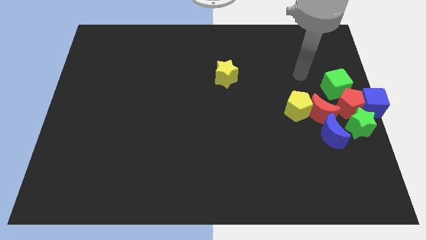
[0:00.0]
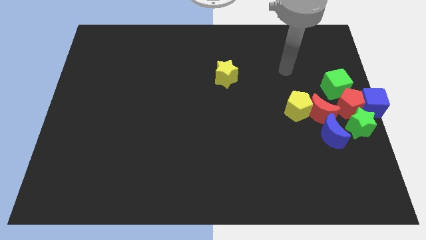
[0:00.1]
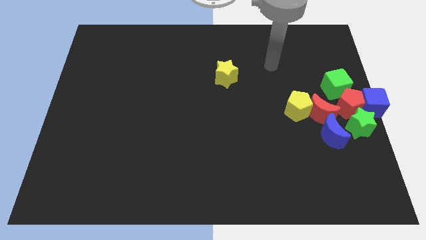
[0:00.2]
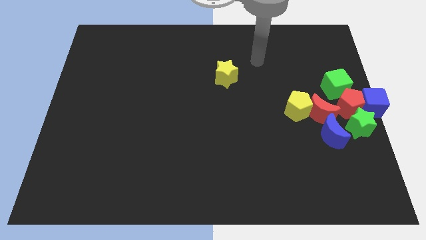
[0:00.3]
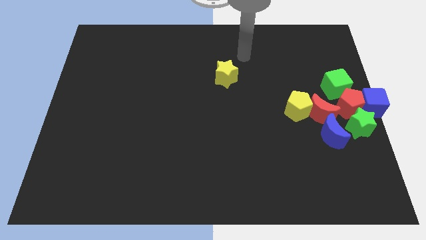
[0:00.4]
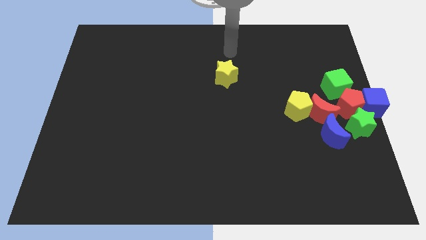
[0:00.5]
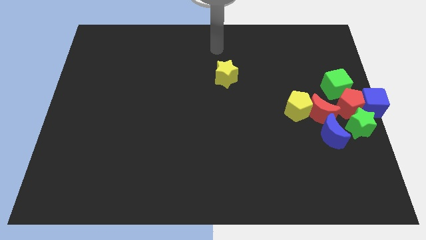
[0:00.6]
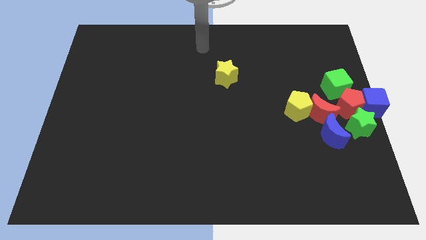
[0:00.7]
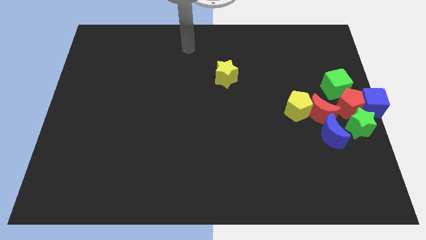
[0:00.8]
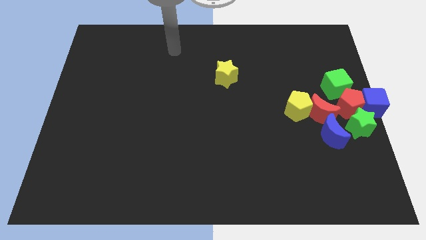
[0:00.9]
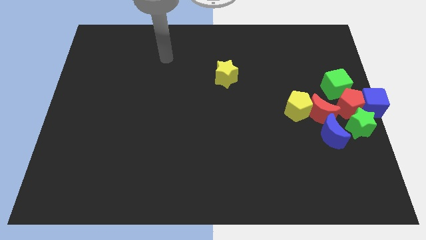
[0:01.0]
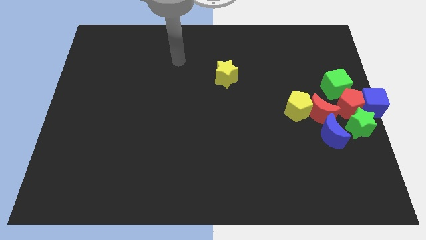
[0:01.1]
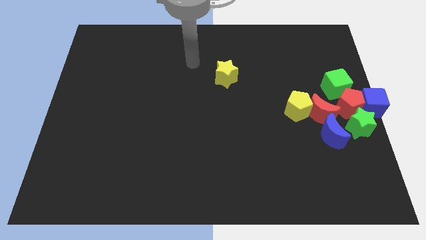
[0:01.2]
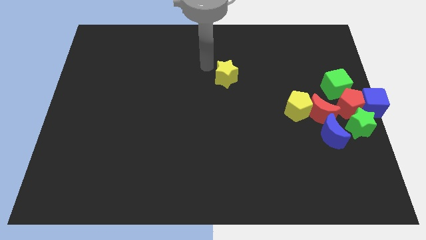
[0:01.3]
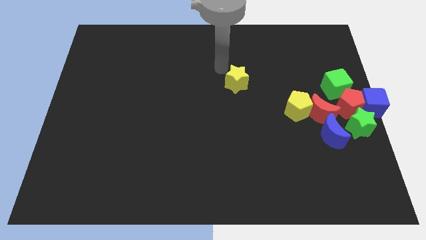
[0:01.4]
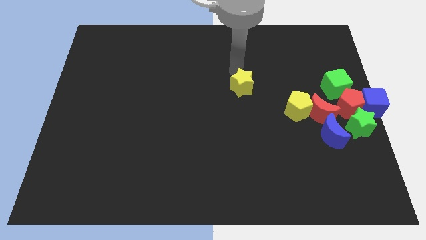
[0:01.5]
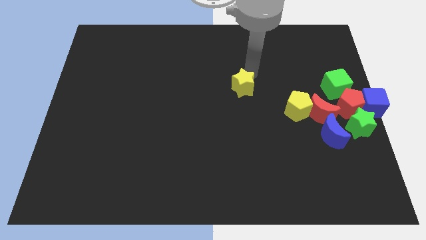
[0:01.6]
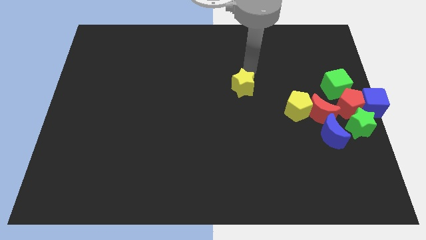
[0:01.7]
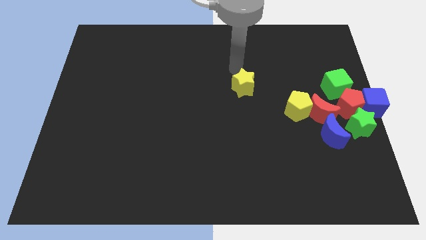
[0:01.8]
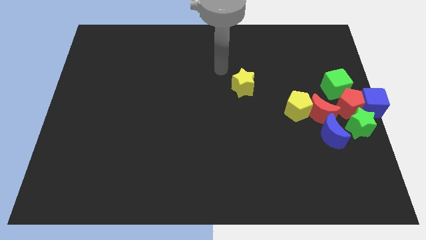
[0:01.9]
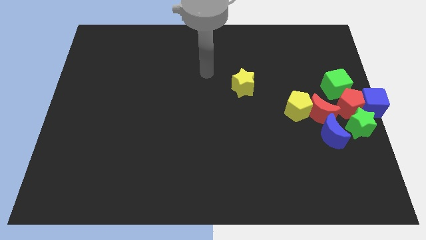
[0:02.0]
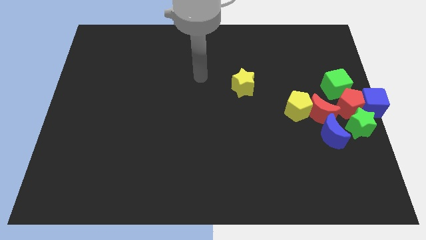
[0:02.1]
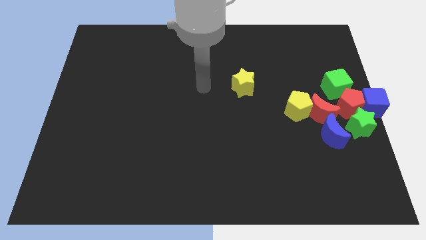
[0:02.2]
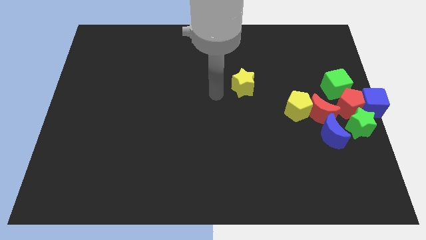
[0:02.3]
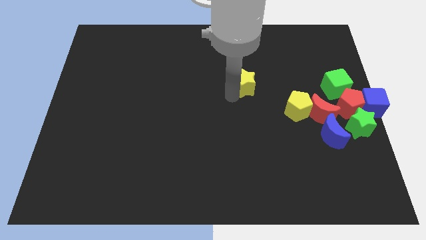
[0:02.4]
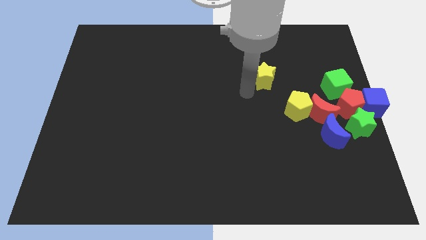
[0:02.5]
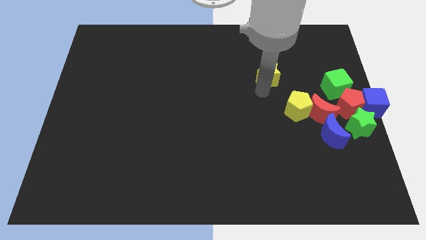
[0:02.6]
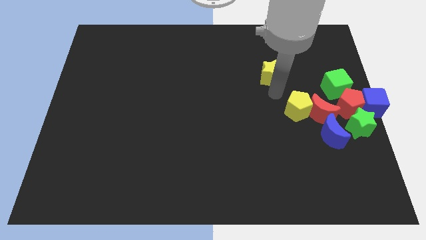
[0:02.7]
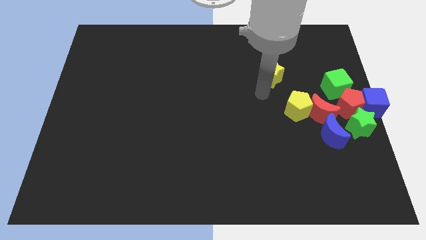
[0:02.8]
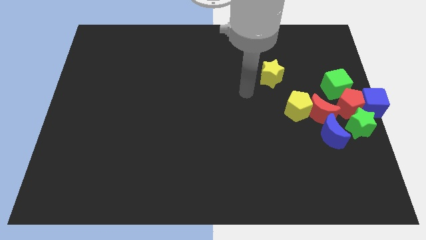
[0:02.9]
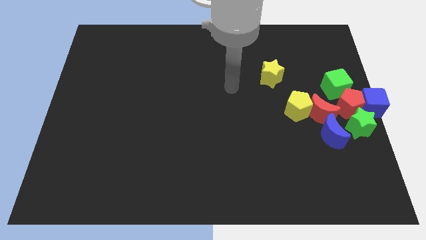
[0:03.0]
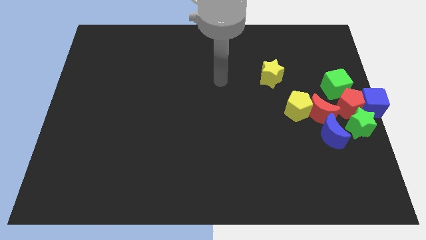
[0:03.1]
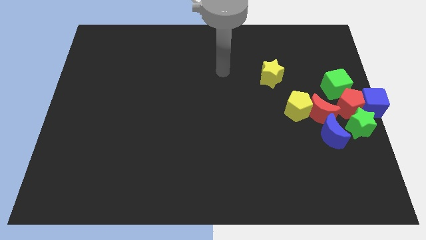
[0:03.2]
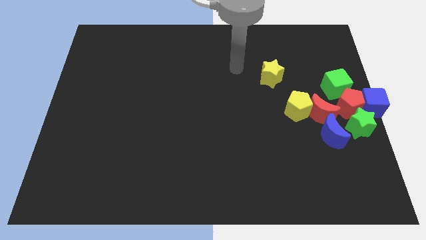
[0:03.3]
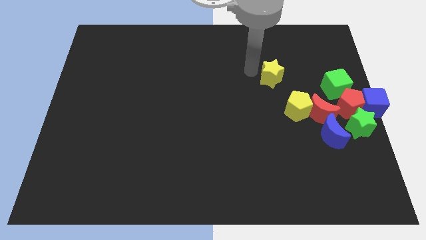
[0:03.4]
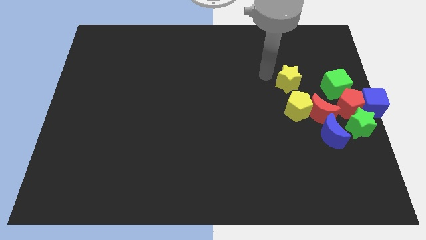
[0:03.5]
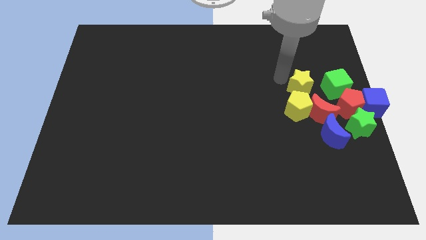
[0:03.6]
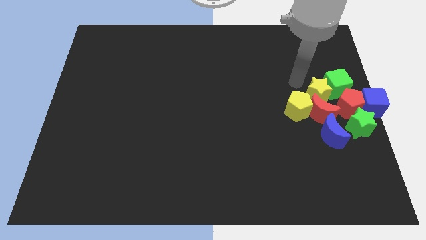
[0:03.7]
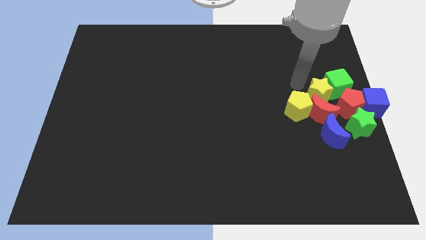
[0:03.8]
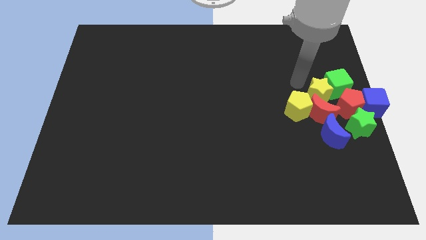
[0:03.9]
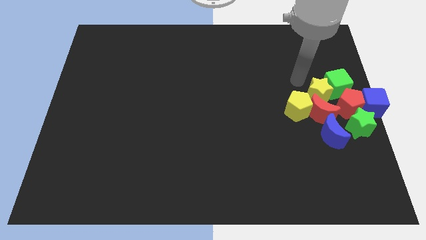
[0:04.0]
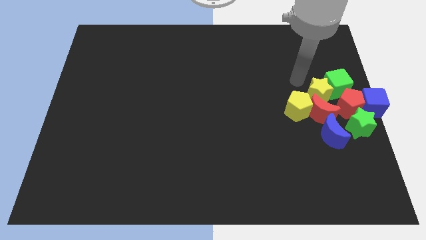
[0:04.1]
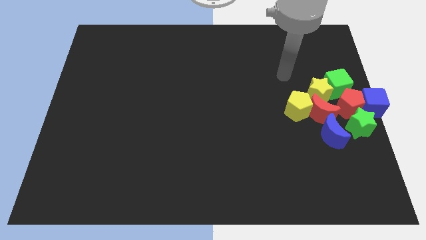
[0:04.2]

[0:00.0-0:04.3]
join the yellow star with the group of blocks

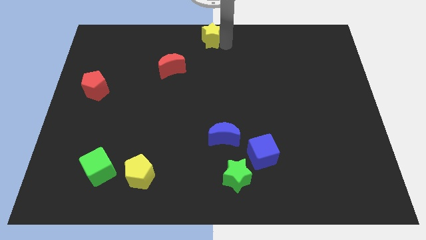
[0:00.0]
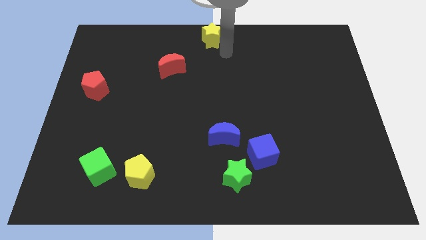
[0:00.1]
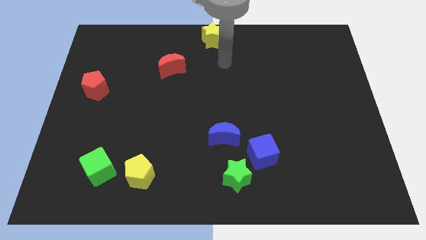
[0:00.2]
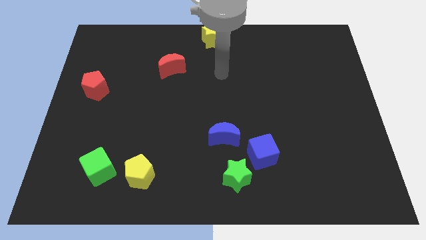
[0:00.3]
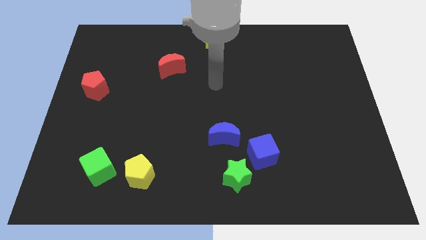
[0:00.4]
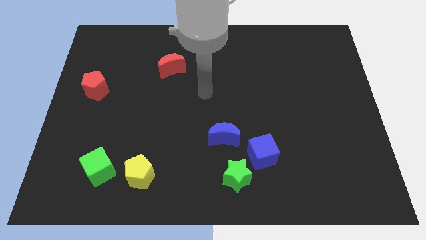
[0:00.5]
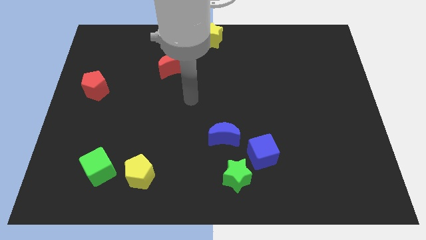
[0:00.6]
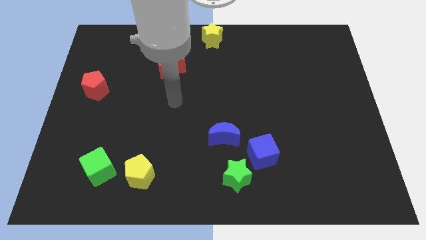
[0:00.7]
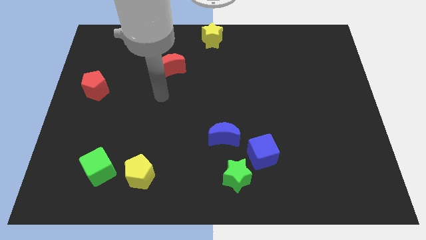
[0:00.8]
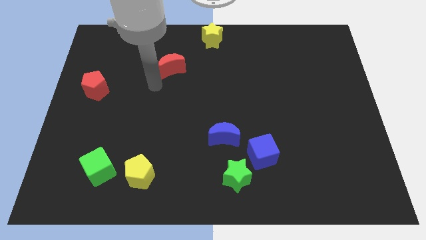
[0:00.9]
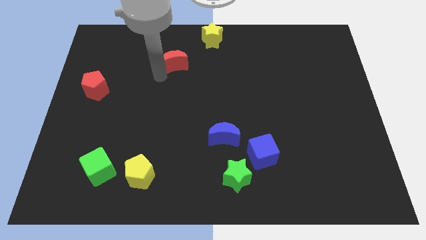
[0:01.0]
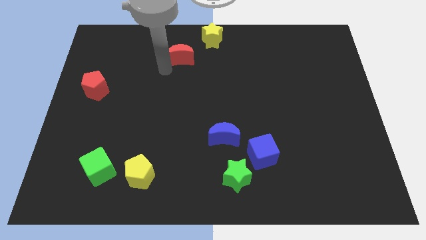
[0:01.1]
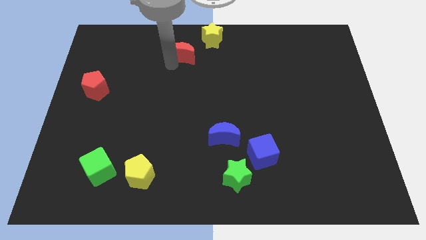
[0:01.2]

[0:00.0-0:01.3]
place the red moon diagonally bottom left to the yellow star

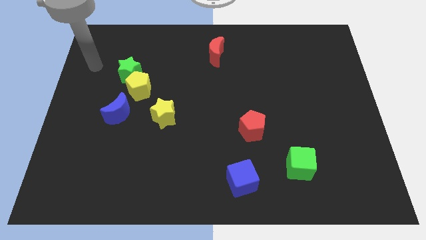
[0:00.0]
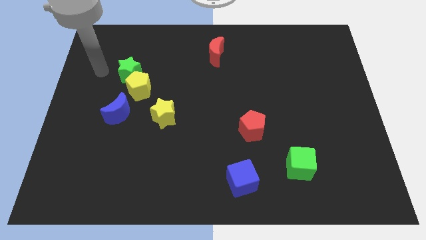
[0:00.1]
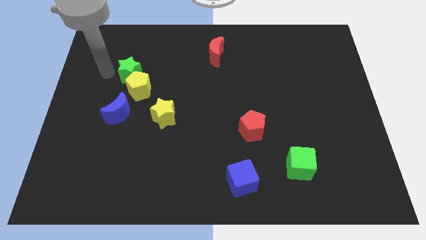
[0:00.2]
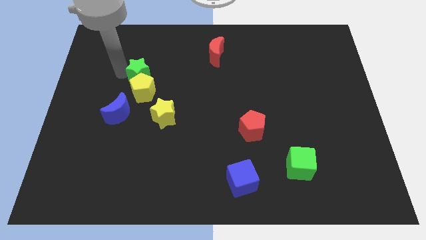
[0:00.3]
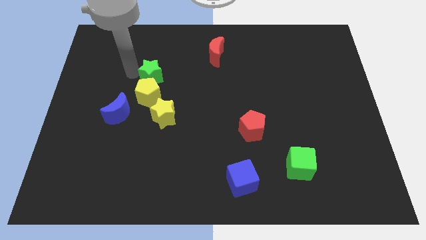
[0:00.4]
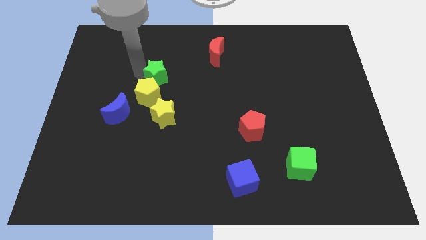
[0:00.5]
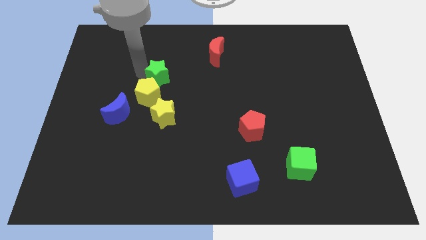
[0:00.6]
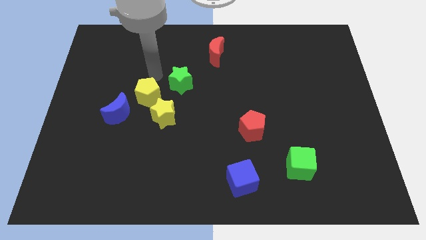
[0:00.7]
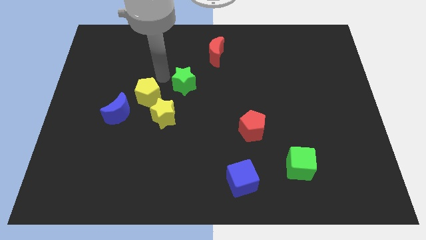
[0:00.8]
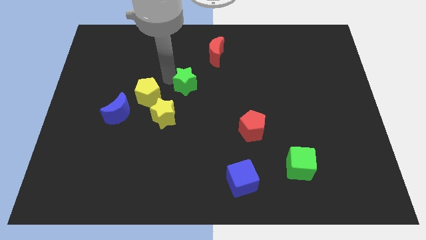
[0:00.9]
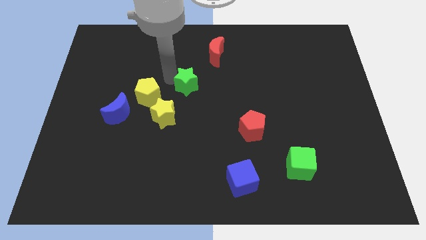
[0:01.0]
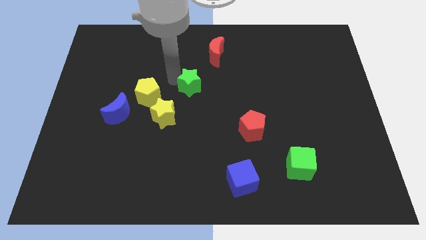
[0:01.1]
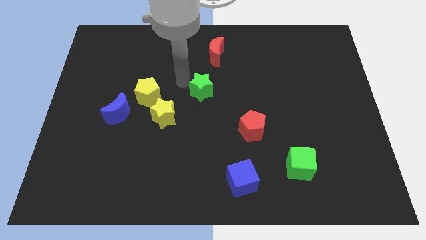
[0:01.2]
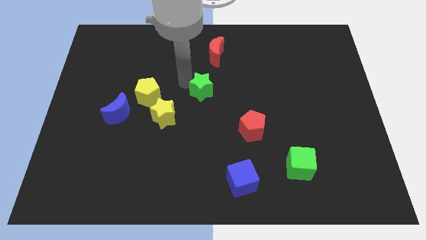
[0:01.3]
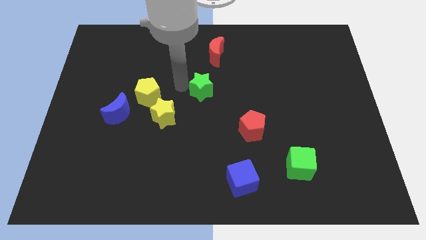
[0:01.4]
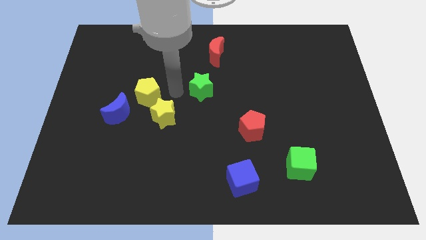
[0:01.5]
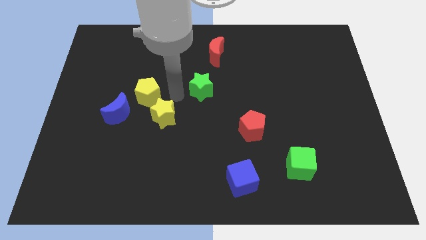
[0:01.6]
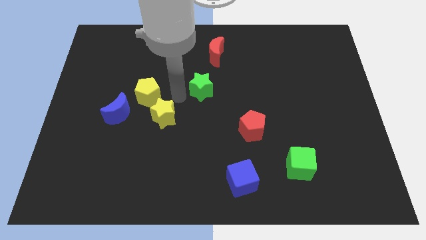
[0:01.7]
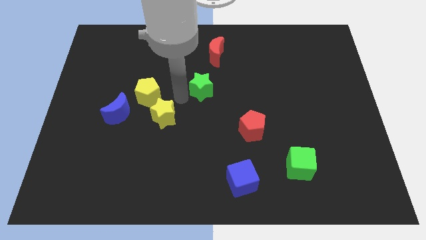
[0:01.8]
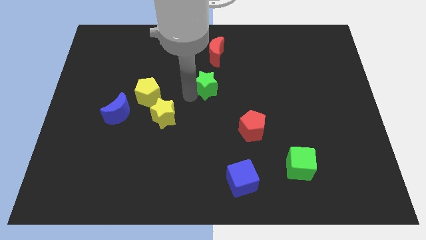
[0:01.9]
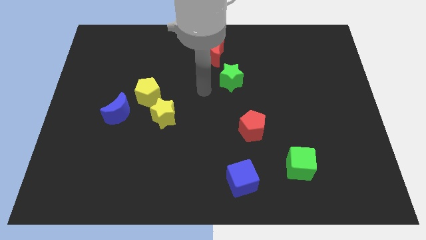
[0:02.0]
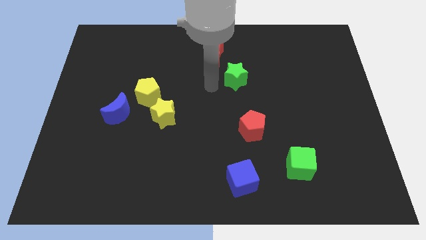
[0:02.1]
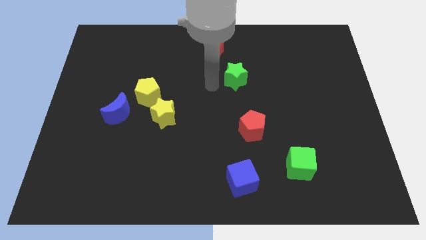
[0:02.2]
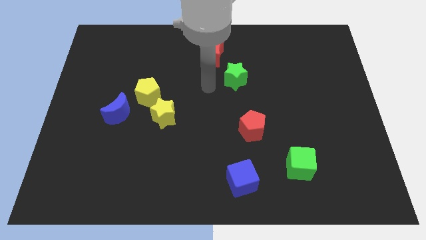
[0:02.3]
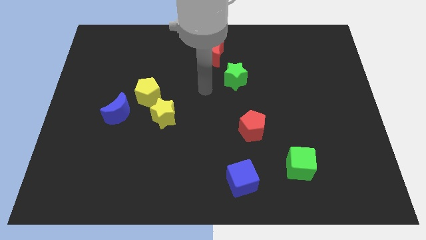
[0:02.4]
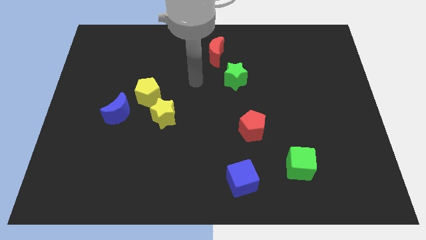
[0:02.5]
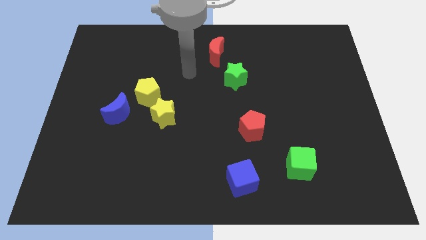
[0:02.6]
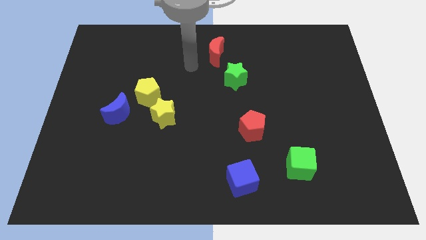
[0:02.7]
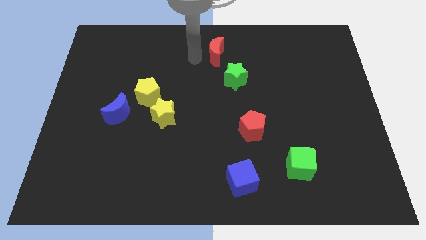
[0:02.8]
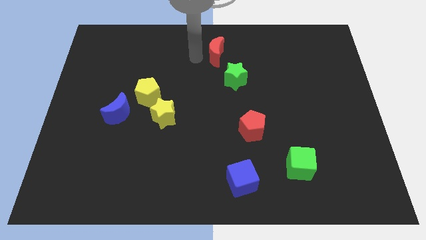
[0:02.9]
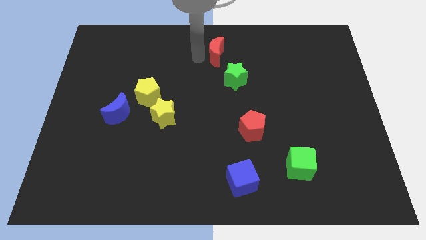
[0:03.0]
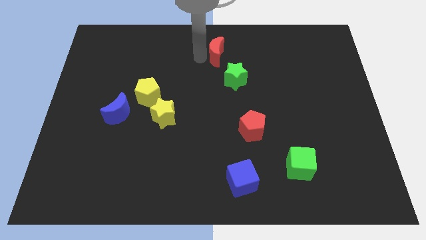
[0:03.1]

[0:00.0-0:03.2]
slide the green star to the bottom right side of the red crescent

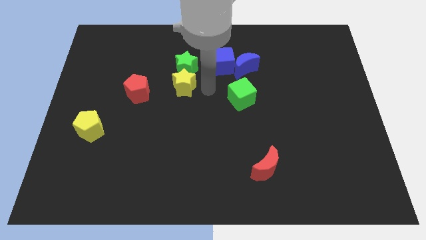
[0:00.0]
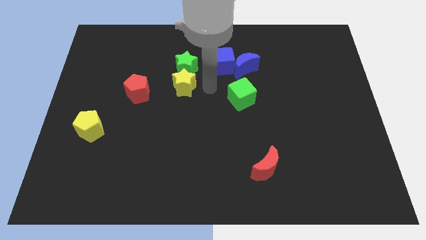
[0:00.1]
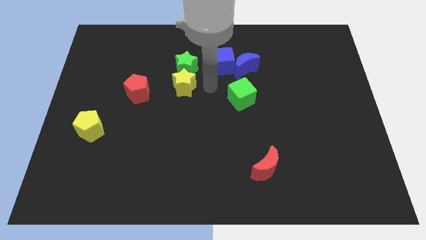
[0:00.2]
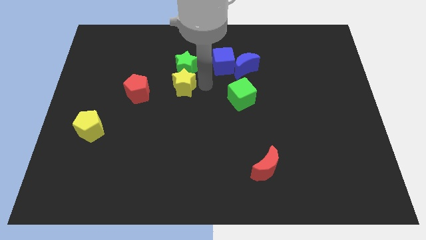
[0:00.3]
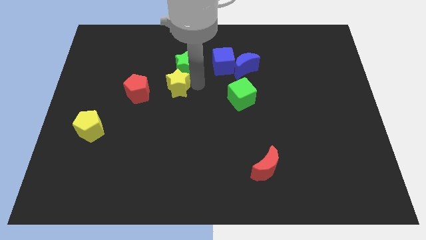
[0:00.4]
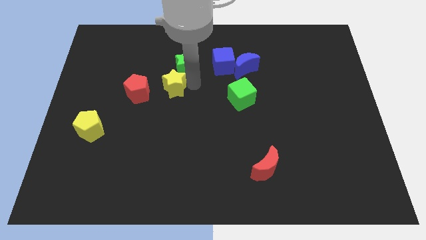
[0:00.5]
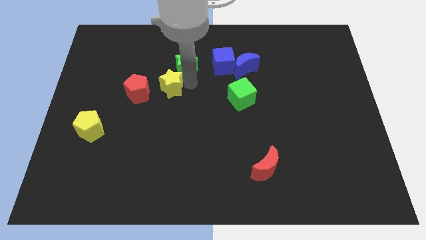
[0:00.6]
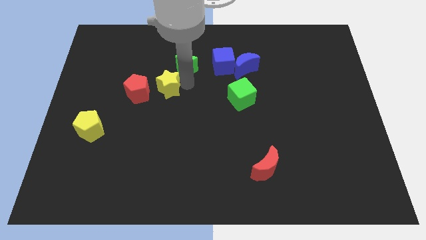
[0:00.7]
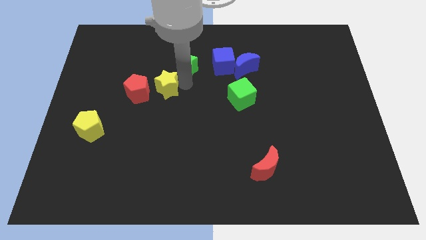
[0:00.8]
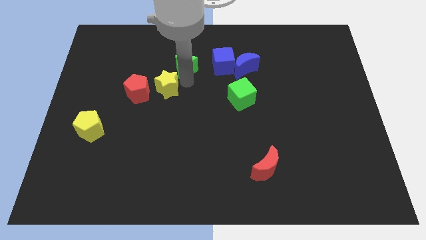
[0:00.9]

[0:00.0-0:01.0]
push yellow star slightly towards red pentagon
